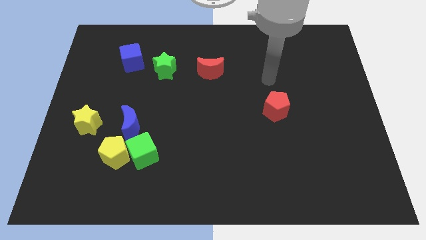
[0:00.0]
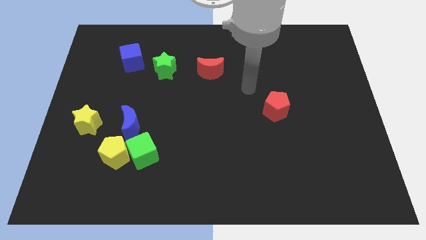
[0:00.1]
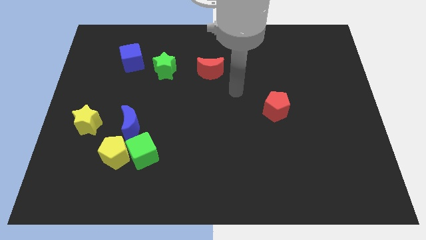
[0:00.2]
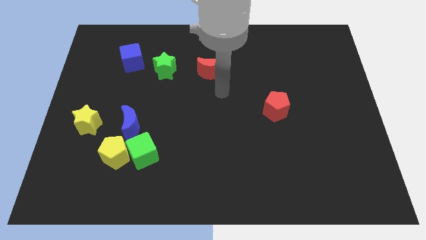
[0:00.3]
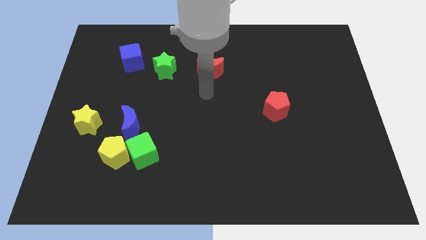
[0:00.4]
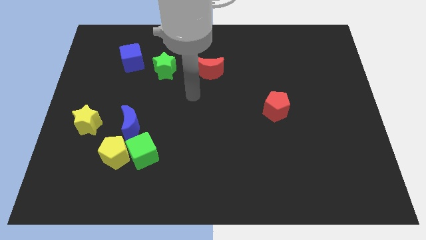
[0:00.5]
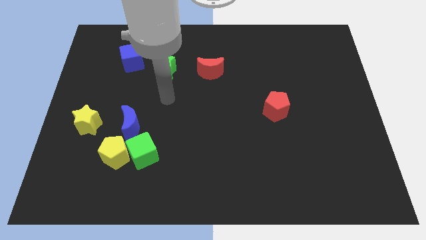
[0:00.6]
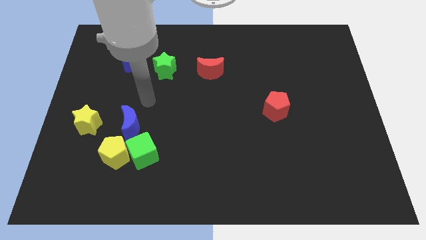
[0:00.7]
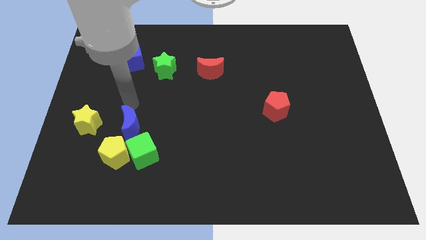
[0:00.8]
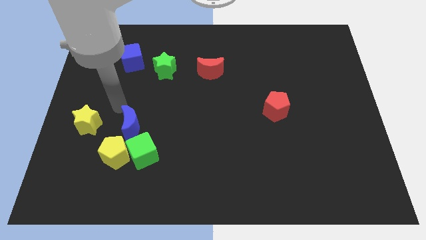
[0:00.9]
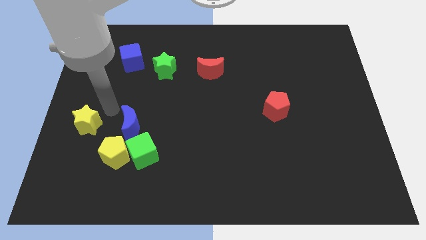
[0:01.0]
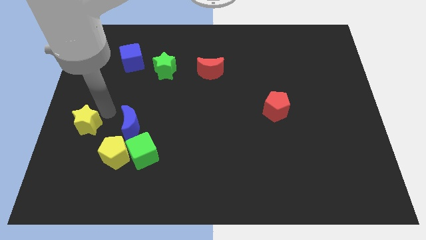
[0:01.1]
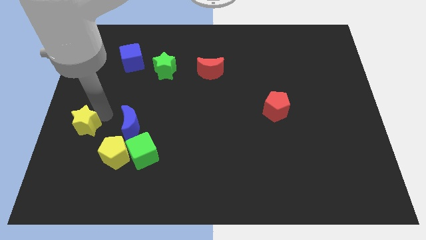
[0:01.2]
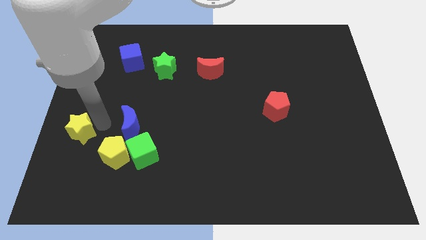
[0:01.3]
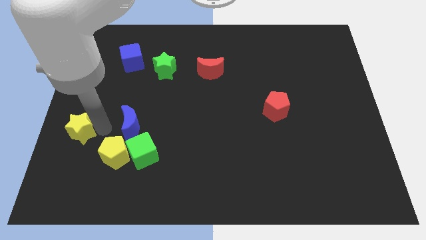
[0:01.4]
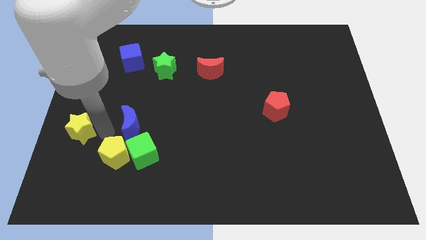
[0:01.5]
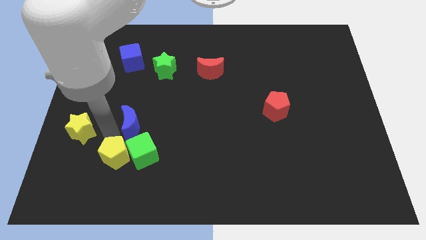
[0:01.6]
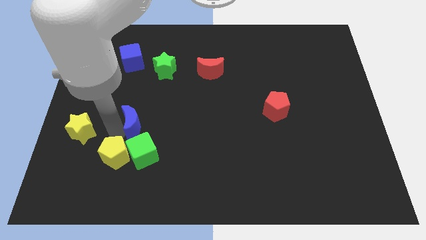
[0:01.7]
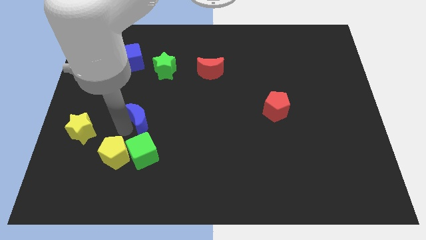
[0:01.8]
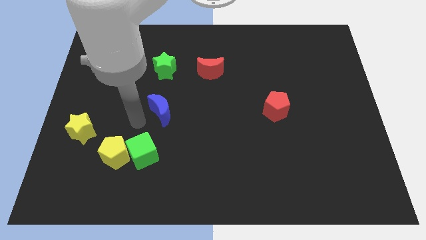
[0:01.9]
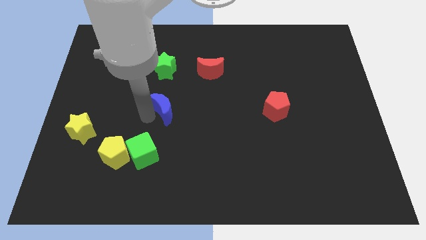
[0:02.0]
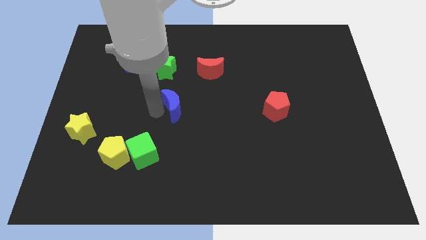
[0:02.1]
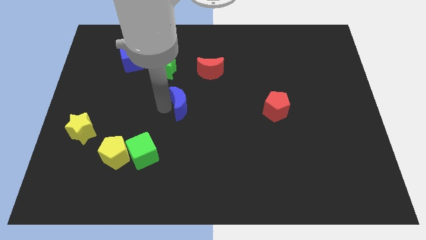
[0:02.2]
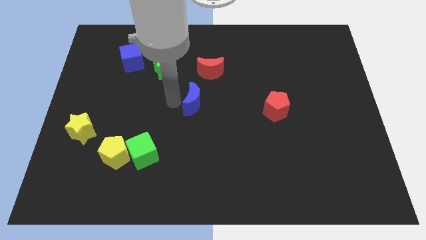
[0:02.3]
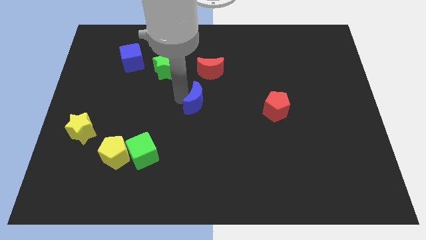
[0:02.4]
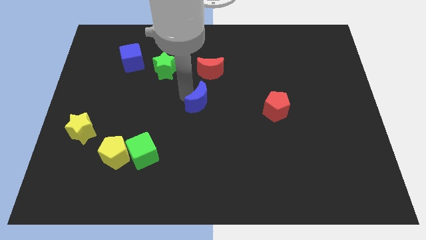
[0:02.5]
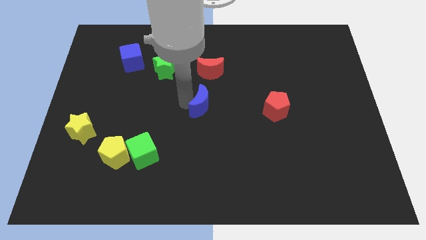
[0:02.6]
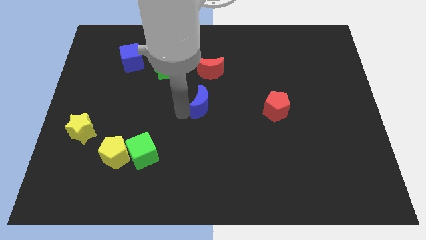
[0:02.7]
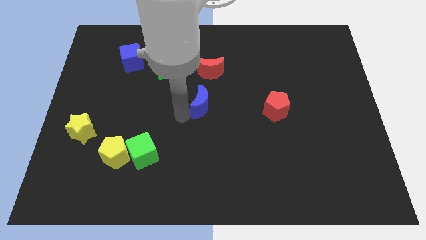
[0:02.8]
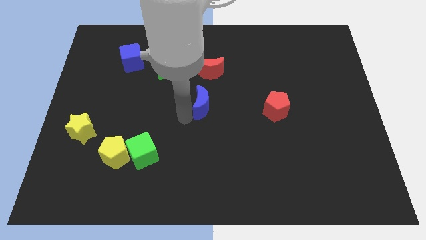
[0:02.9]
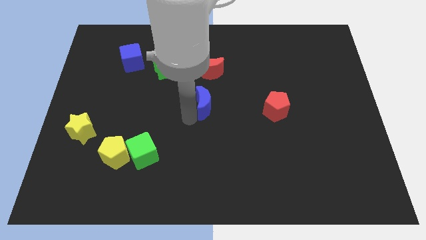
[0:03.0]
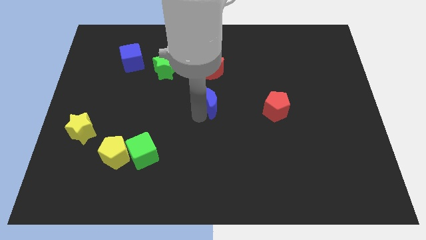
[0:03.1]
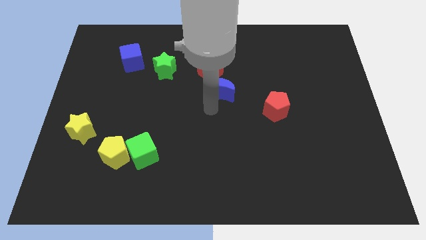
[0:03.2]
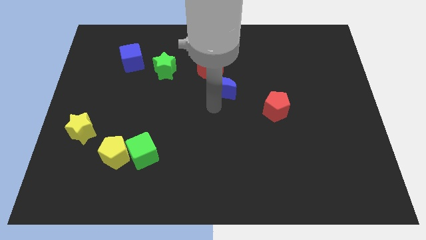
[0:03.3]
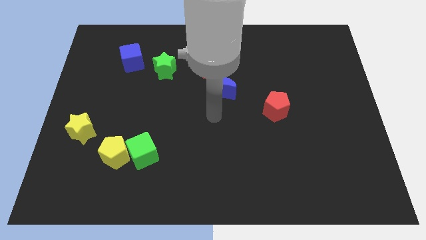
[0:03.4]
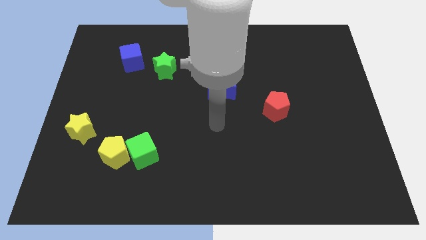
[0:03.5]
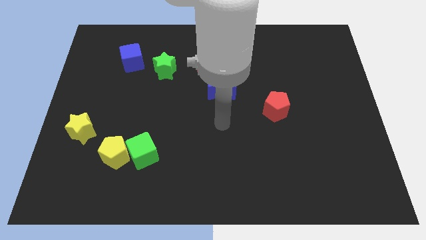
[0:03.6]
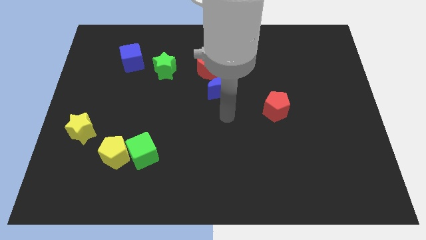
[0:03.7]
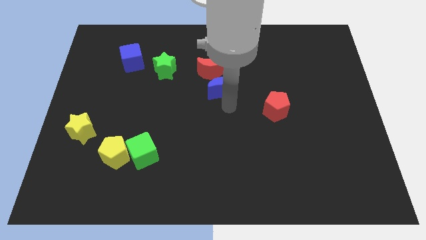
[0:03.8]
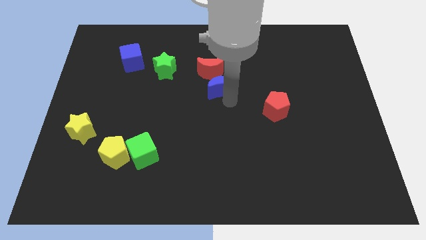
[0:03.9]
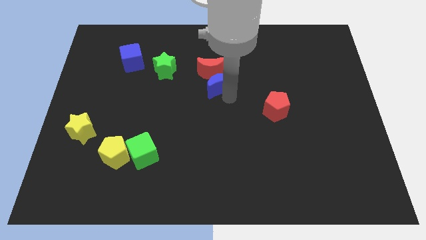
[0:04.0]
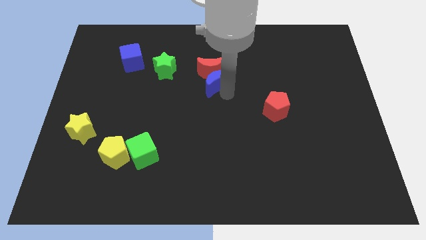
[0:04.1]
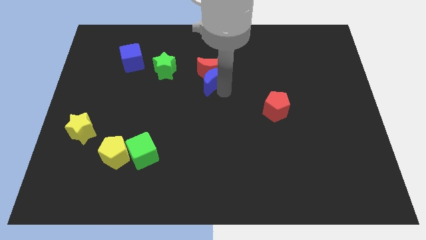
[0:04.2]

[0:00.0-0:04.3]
slide the blue moon to the red moon

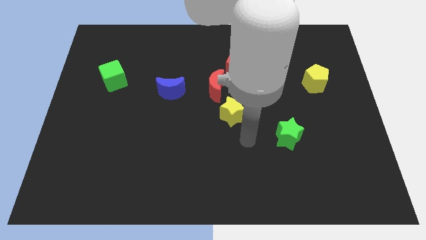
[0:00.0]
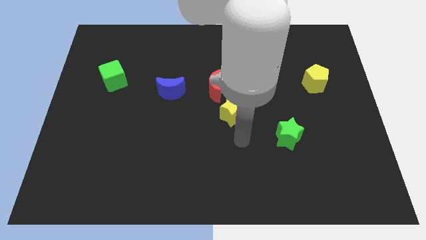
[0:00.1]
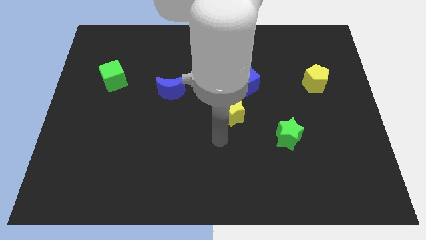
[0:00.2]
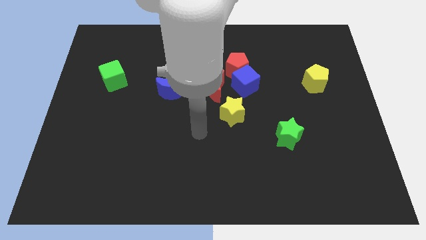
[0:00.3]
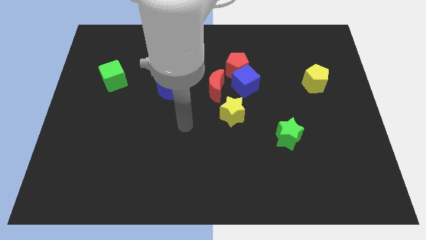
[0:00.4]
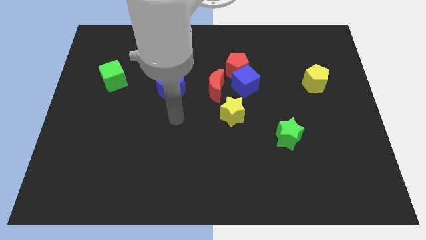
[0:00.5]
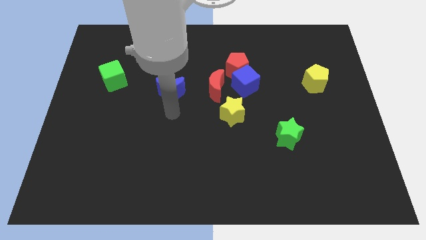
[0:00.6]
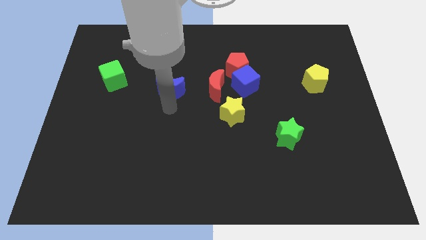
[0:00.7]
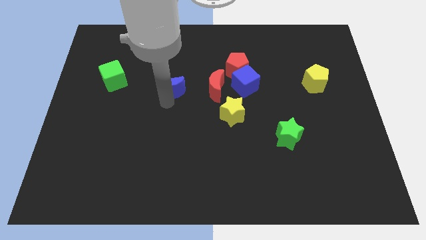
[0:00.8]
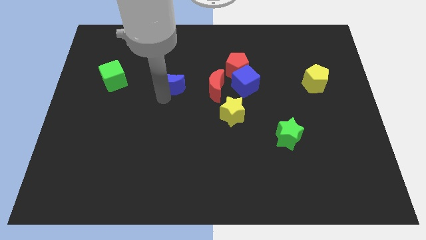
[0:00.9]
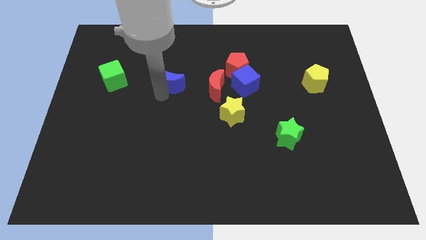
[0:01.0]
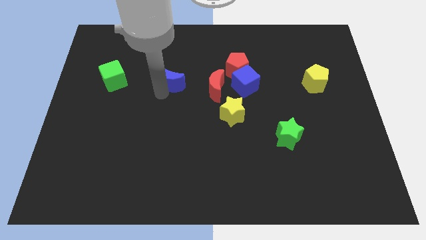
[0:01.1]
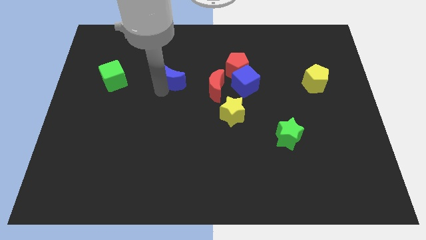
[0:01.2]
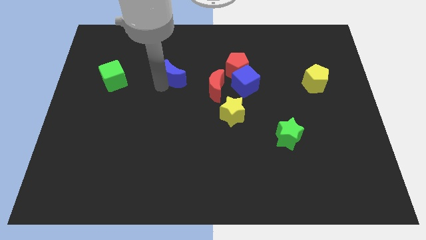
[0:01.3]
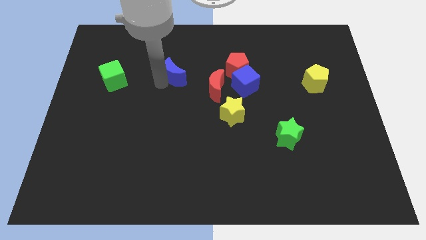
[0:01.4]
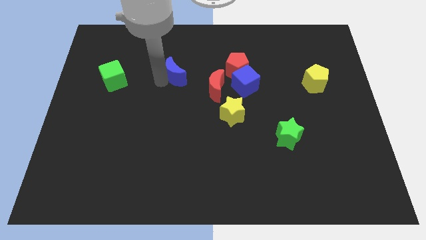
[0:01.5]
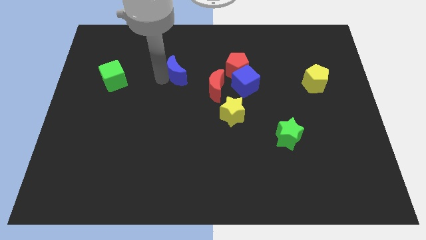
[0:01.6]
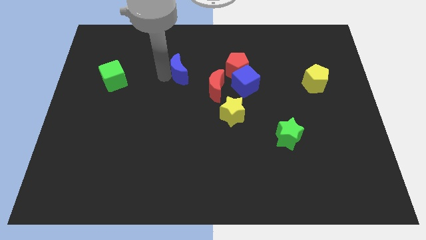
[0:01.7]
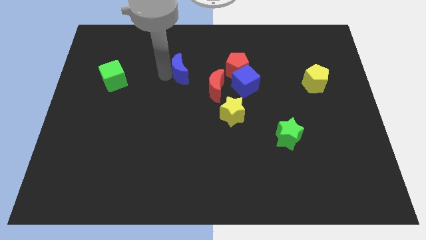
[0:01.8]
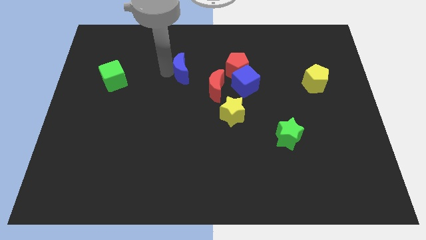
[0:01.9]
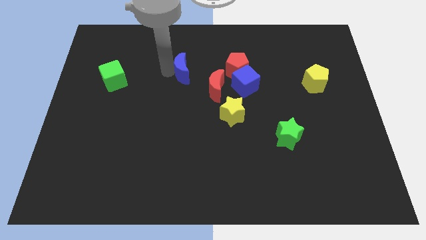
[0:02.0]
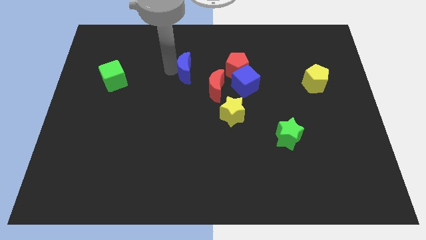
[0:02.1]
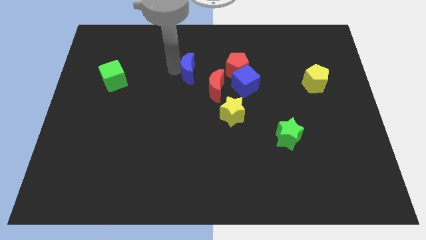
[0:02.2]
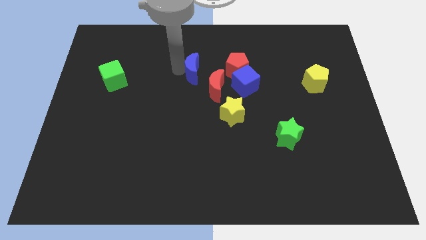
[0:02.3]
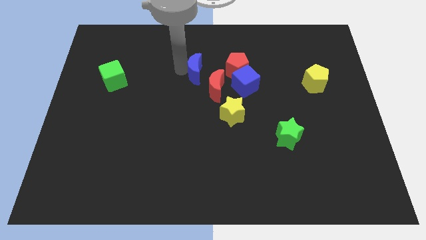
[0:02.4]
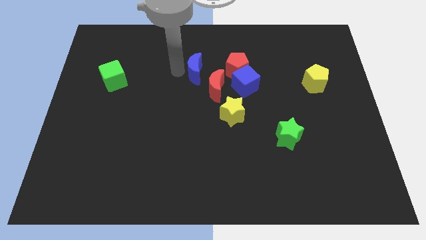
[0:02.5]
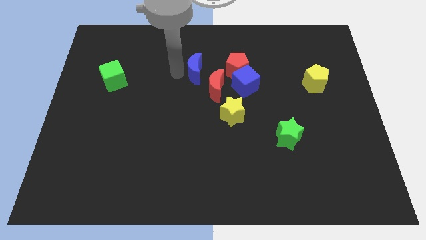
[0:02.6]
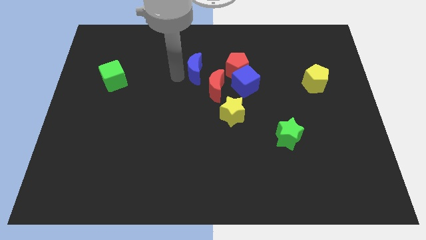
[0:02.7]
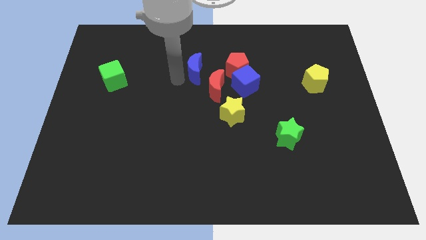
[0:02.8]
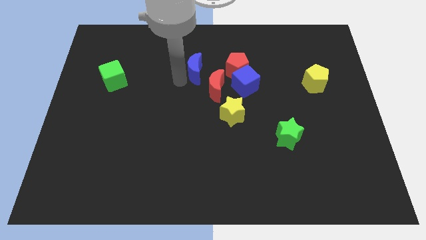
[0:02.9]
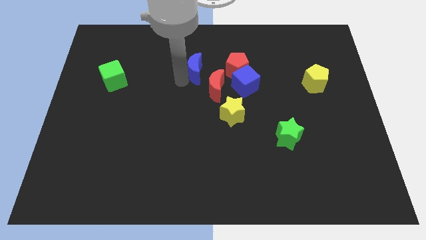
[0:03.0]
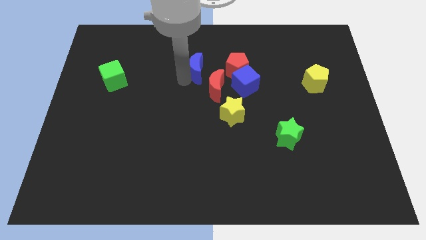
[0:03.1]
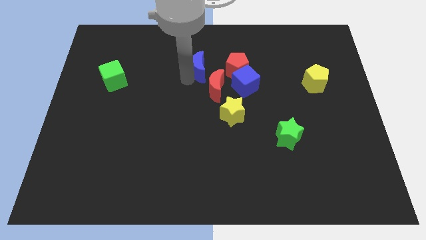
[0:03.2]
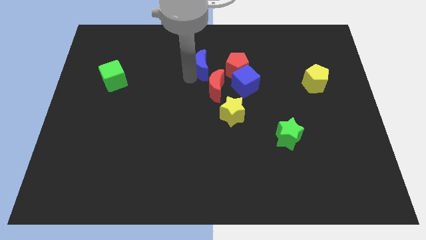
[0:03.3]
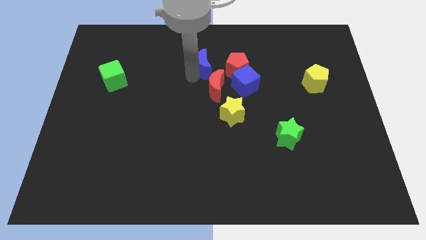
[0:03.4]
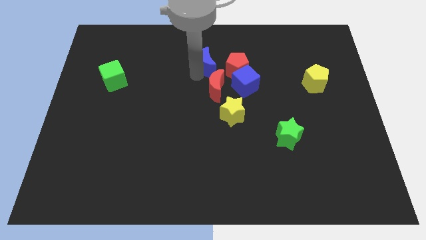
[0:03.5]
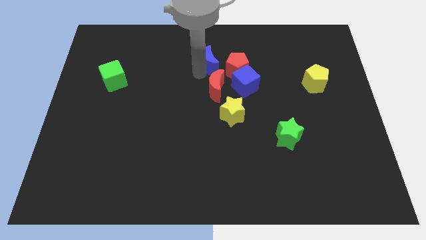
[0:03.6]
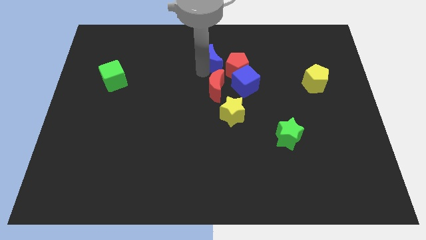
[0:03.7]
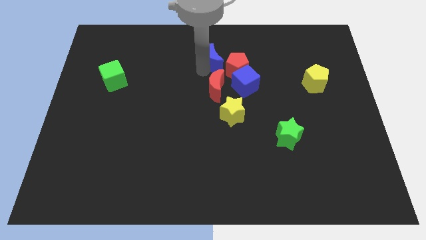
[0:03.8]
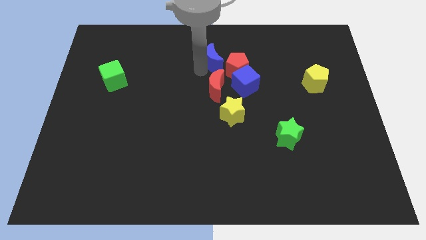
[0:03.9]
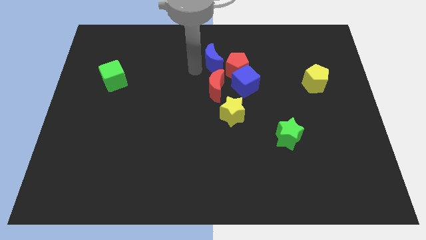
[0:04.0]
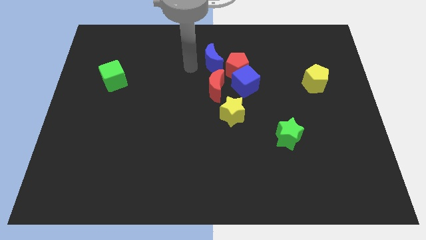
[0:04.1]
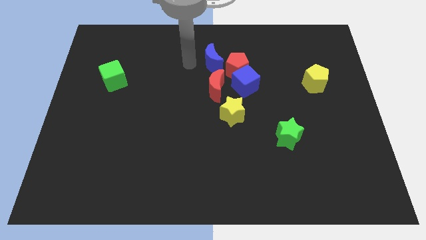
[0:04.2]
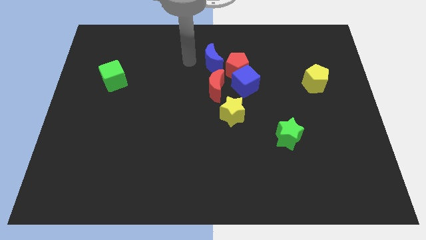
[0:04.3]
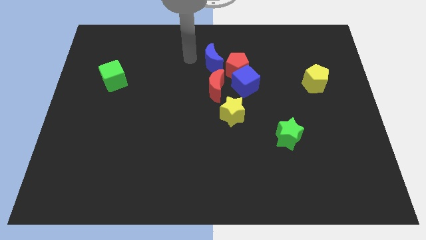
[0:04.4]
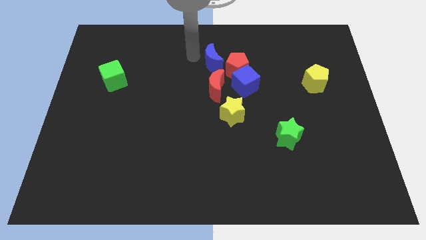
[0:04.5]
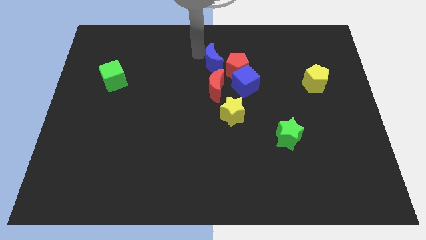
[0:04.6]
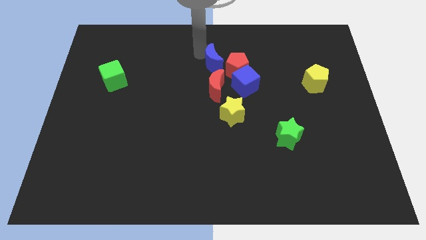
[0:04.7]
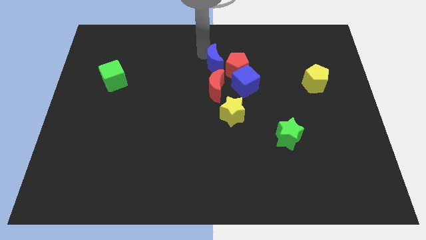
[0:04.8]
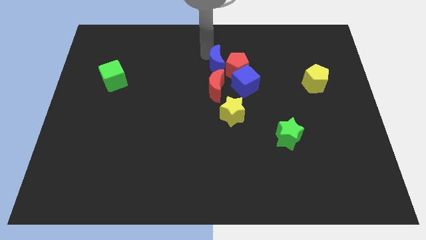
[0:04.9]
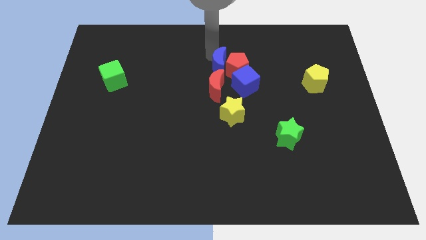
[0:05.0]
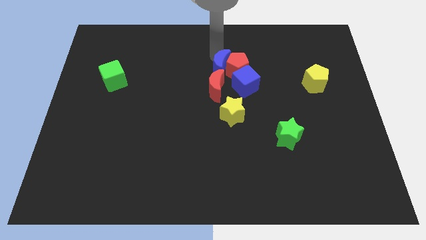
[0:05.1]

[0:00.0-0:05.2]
put the blue moon close to the red pentagon
